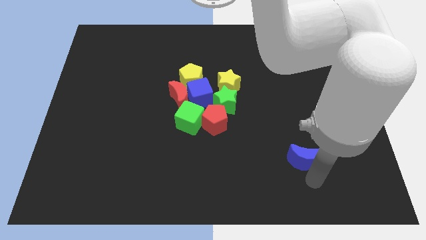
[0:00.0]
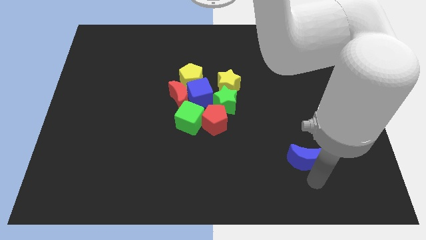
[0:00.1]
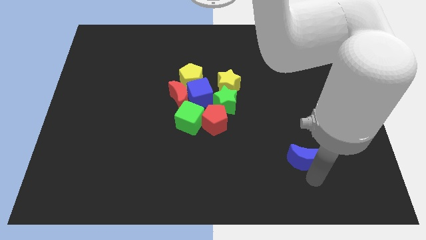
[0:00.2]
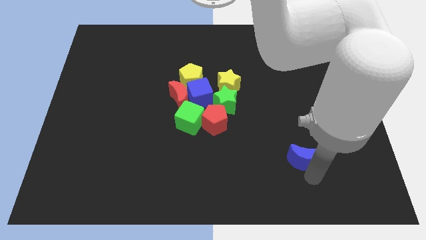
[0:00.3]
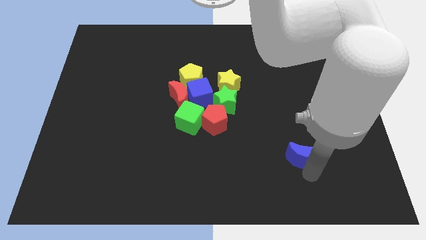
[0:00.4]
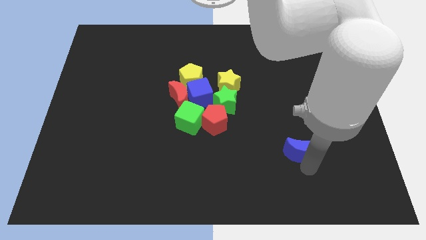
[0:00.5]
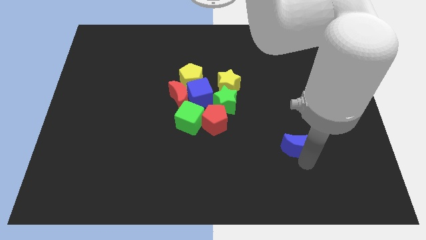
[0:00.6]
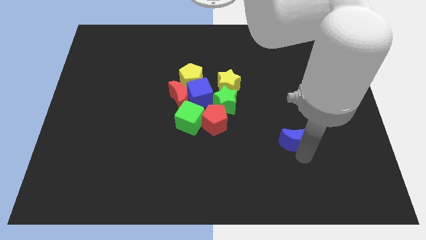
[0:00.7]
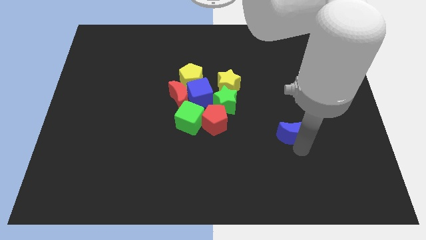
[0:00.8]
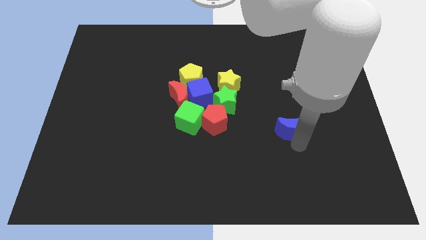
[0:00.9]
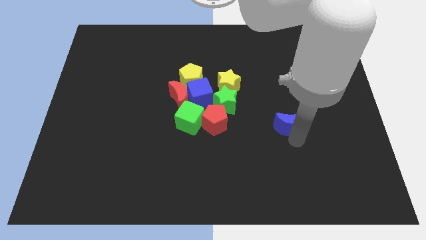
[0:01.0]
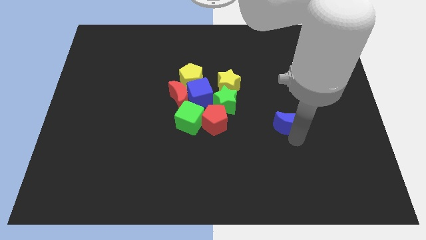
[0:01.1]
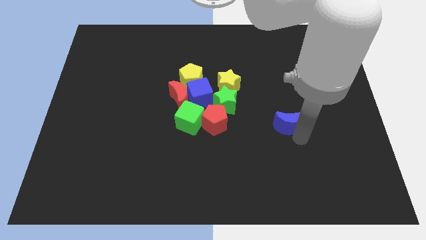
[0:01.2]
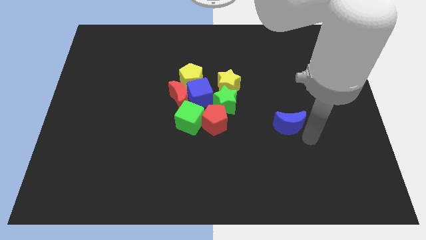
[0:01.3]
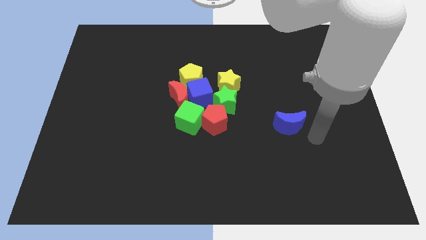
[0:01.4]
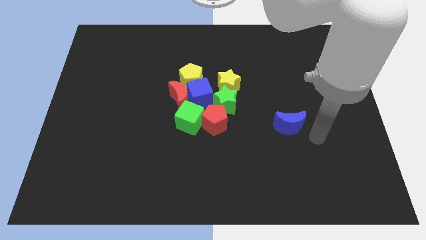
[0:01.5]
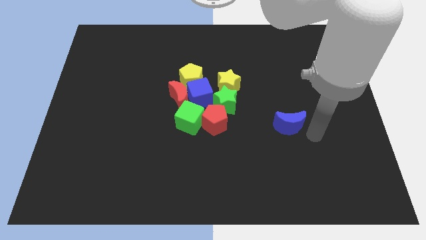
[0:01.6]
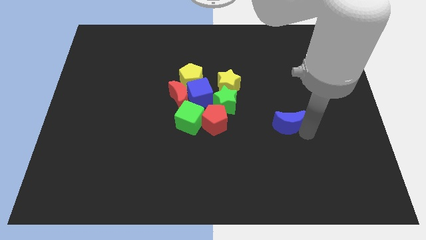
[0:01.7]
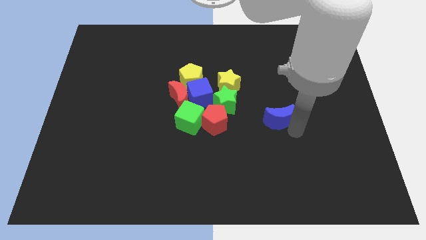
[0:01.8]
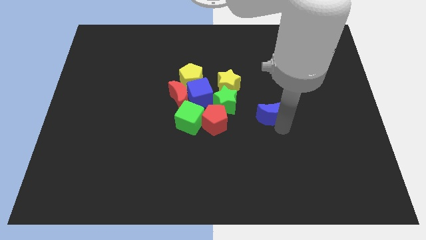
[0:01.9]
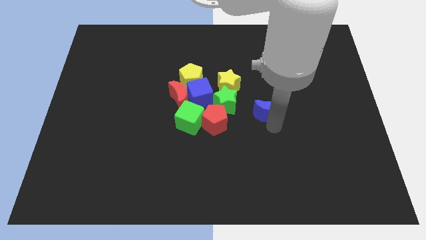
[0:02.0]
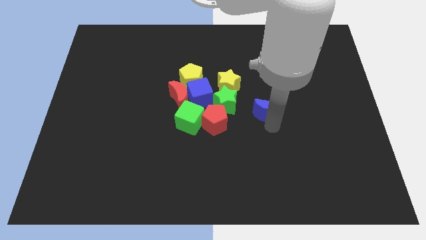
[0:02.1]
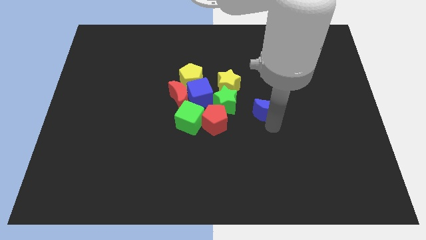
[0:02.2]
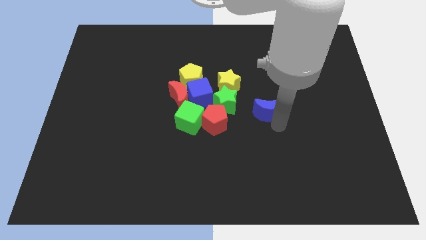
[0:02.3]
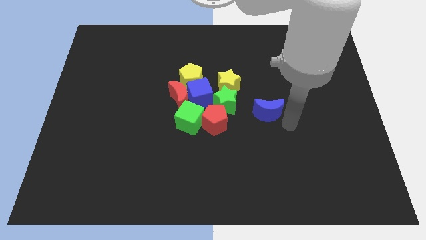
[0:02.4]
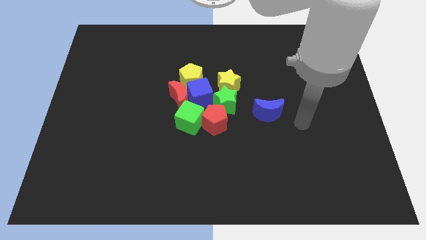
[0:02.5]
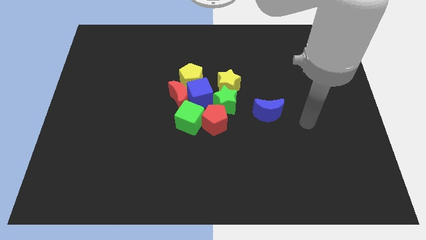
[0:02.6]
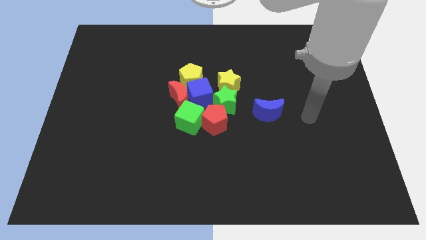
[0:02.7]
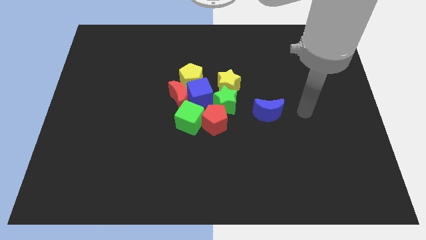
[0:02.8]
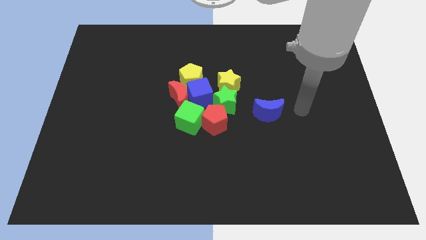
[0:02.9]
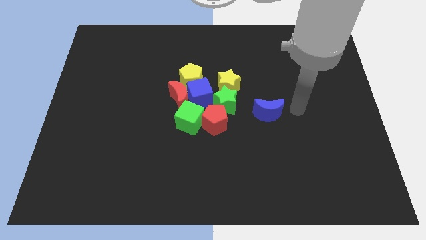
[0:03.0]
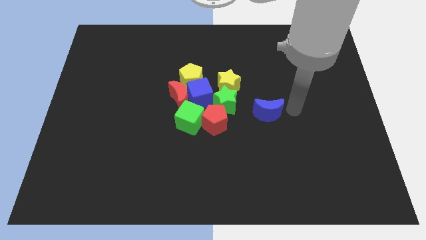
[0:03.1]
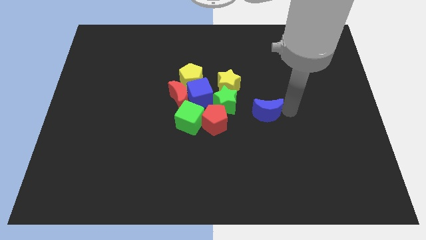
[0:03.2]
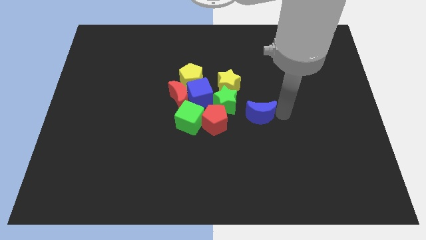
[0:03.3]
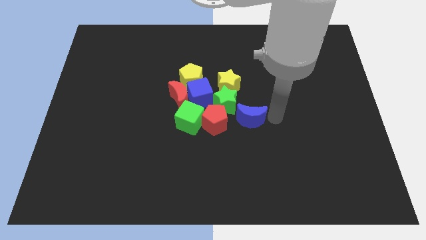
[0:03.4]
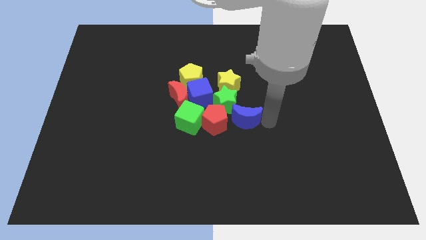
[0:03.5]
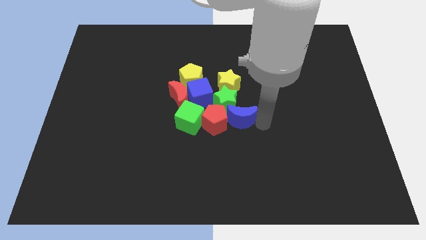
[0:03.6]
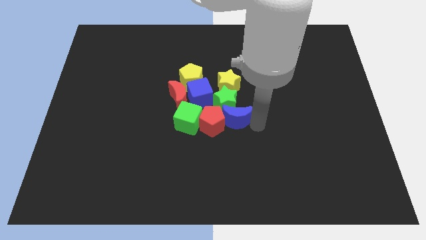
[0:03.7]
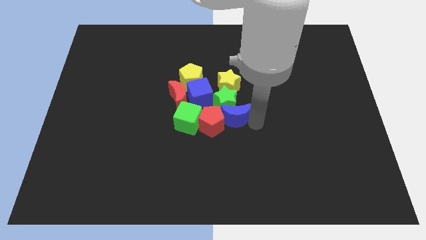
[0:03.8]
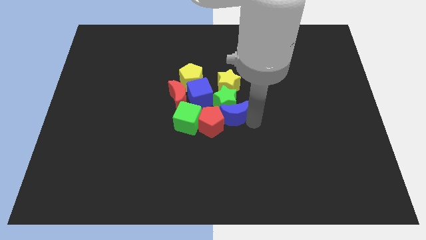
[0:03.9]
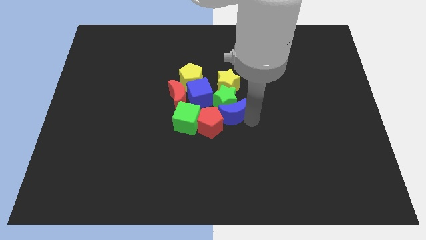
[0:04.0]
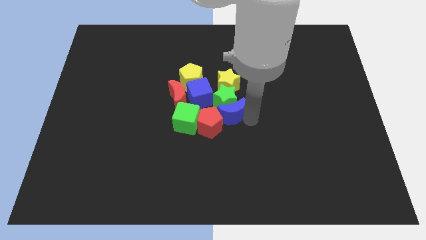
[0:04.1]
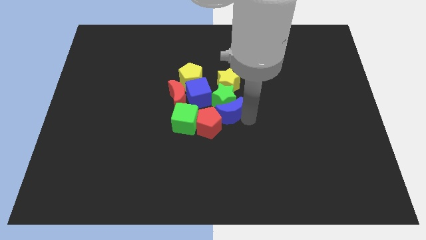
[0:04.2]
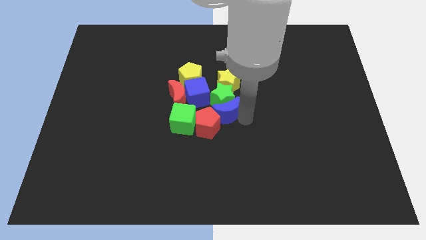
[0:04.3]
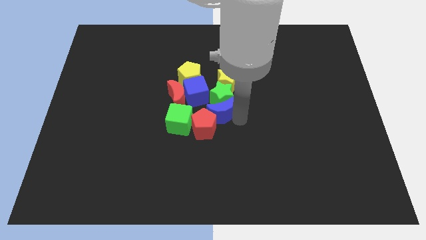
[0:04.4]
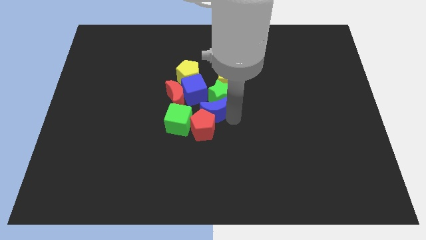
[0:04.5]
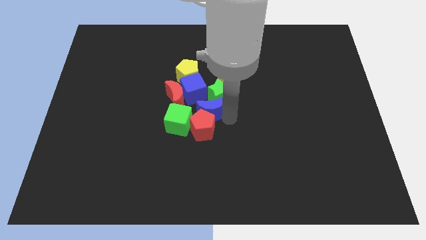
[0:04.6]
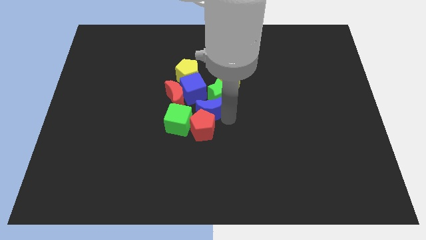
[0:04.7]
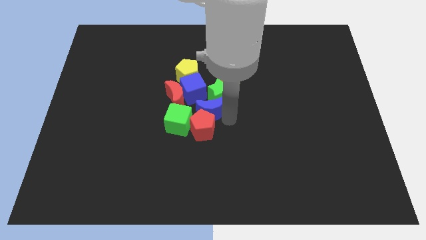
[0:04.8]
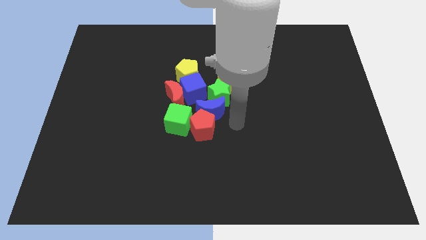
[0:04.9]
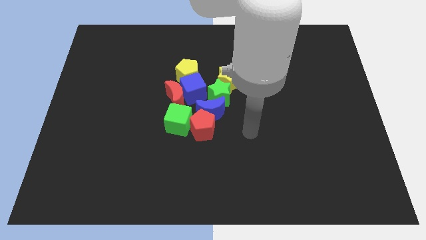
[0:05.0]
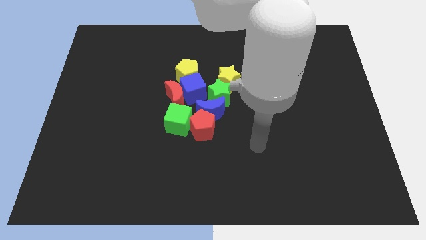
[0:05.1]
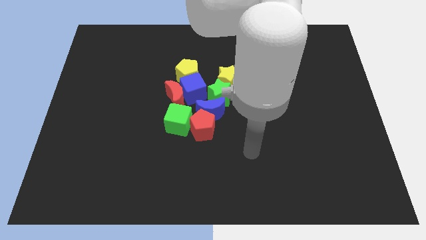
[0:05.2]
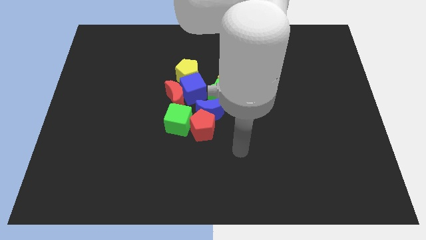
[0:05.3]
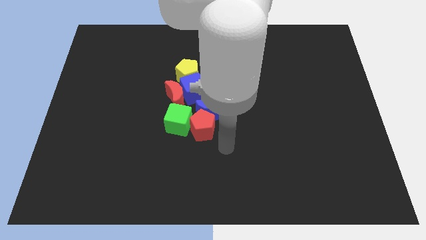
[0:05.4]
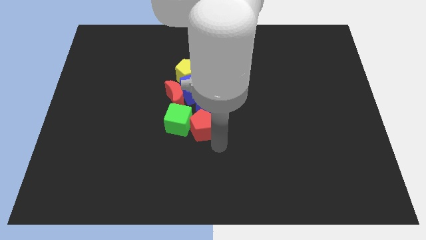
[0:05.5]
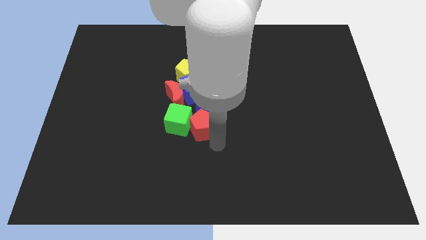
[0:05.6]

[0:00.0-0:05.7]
place the blue crescent below the blue cube

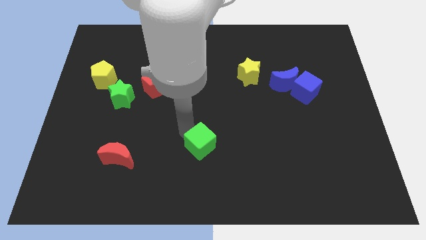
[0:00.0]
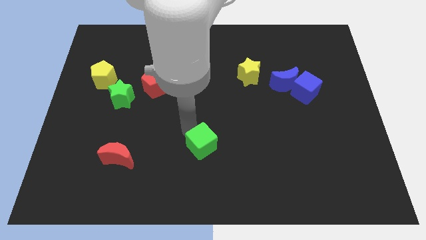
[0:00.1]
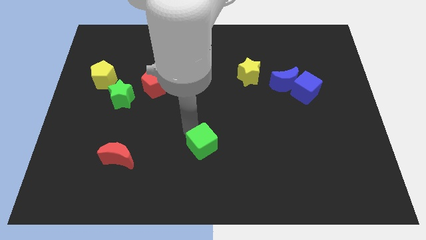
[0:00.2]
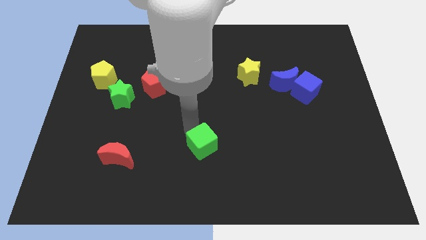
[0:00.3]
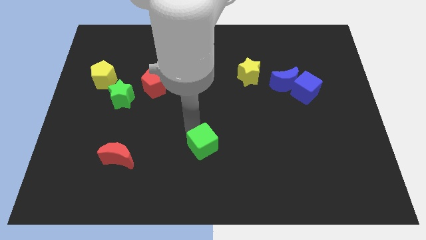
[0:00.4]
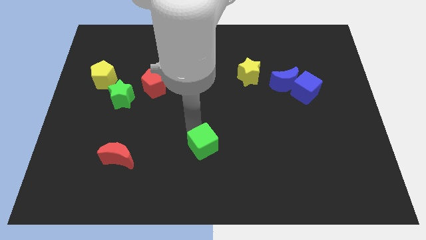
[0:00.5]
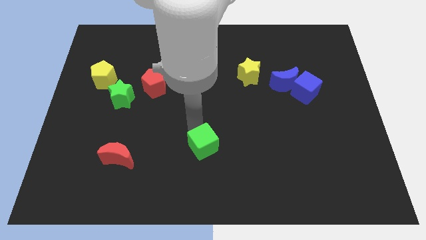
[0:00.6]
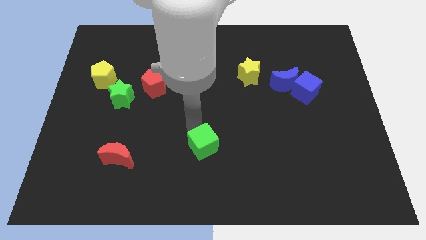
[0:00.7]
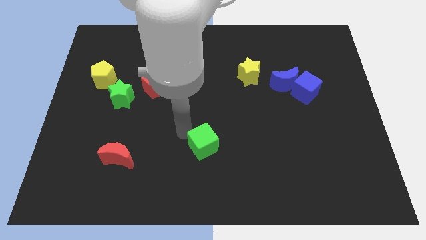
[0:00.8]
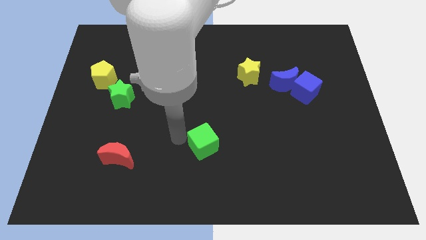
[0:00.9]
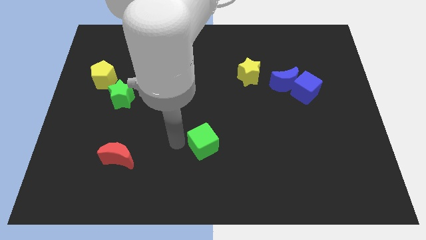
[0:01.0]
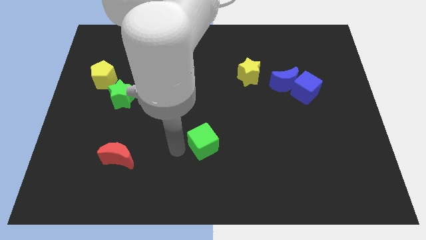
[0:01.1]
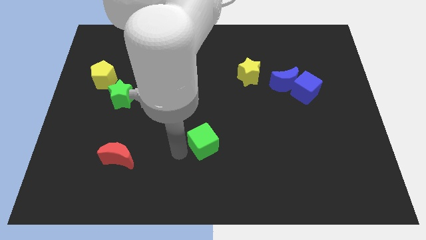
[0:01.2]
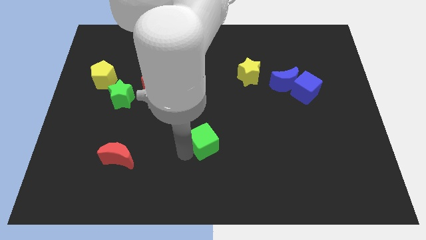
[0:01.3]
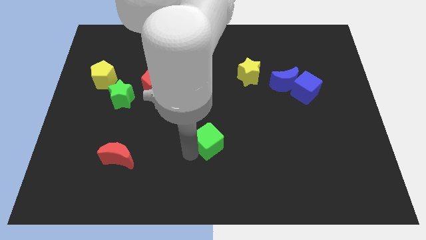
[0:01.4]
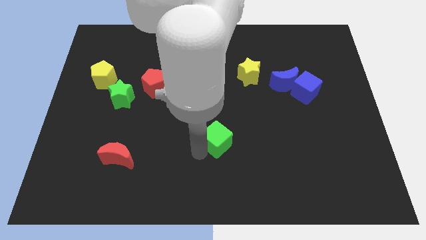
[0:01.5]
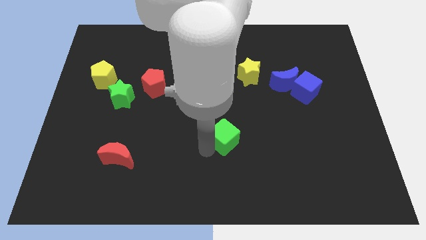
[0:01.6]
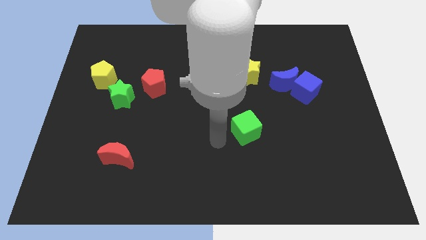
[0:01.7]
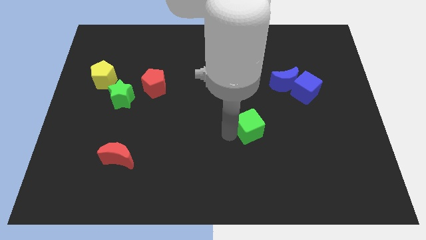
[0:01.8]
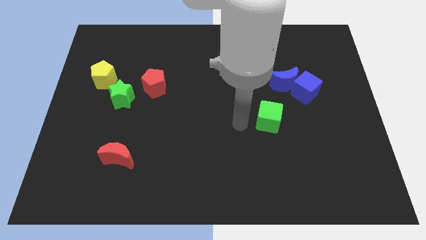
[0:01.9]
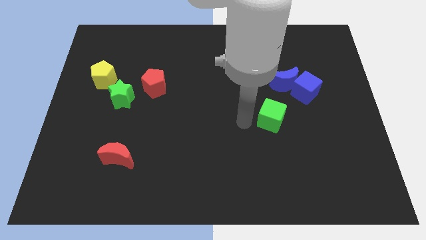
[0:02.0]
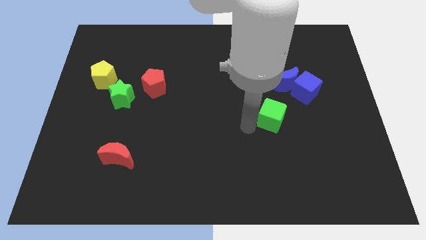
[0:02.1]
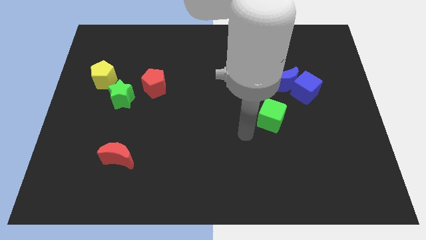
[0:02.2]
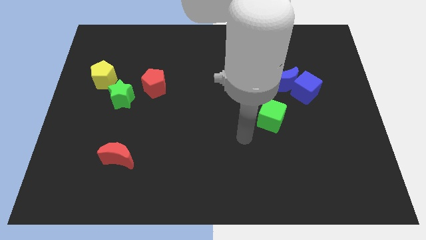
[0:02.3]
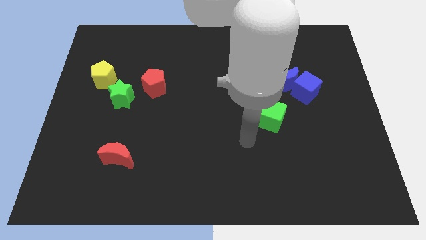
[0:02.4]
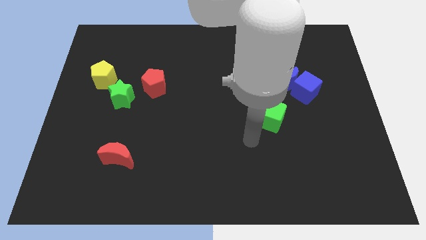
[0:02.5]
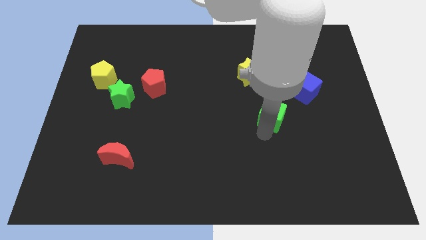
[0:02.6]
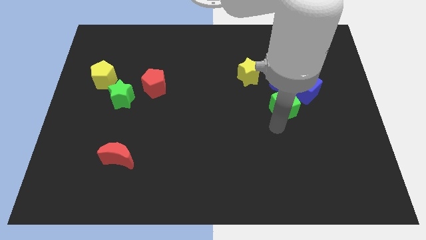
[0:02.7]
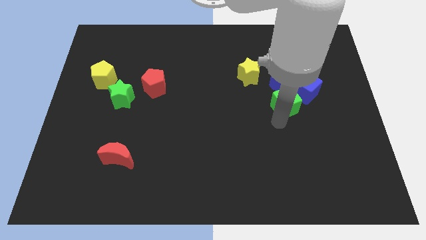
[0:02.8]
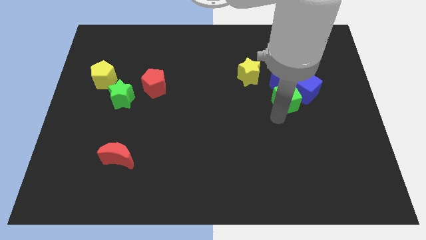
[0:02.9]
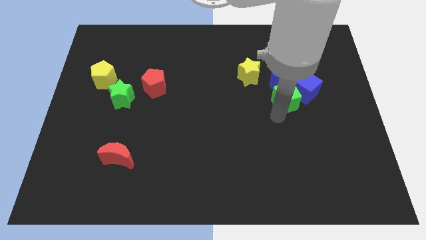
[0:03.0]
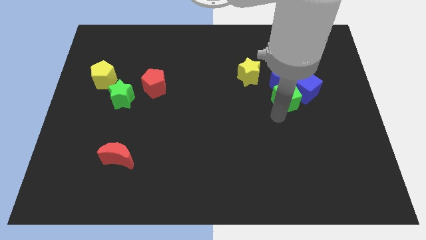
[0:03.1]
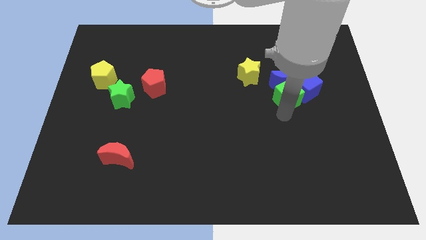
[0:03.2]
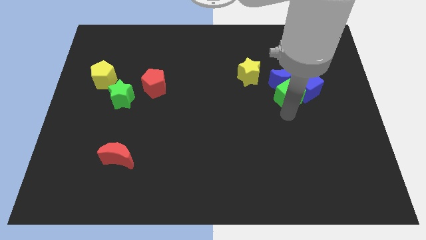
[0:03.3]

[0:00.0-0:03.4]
push green cube in to blue blocks
